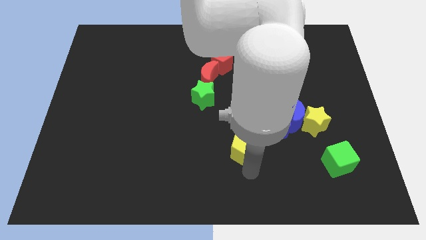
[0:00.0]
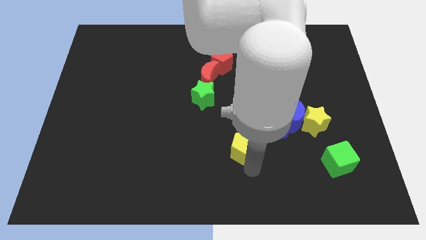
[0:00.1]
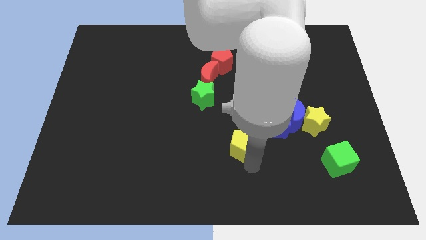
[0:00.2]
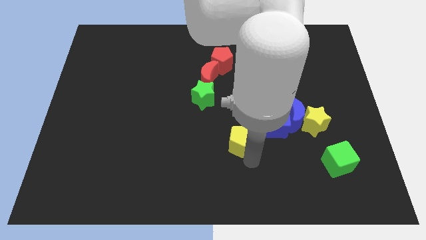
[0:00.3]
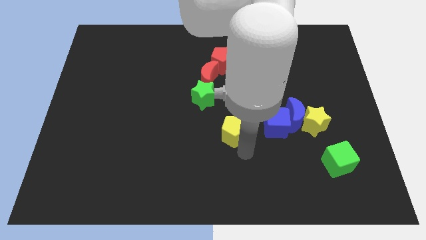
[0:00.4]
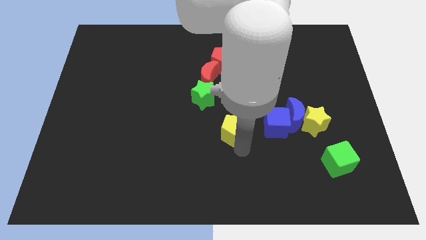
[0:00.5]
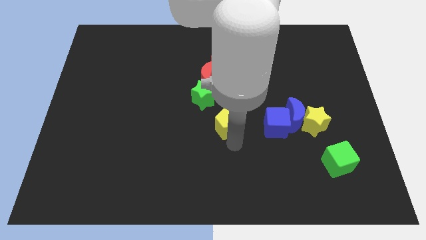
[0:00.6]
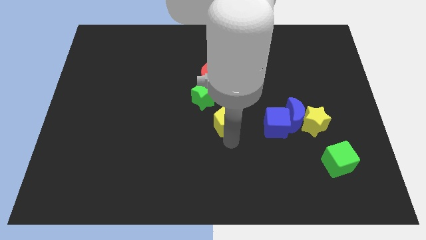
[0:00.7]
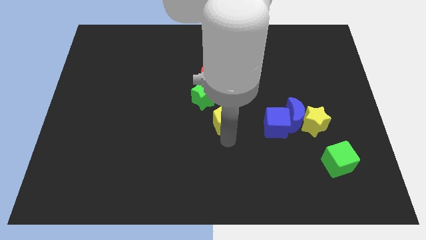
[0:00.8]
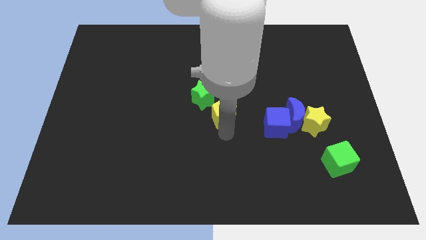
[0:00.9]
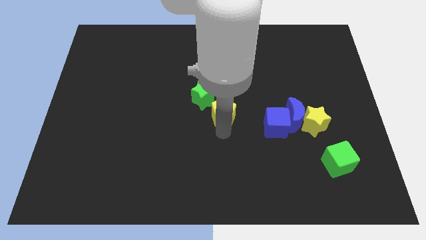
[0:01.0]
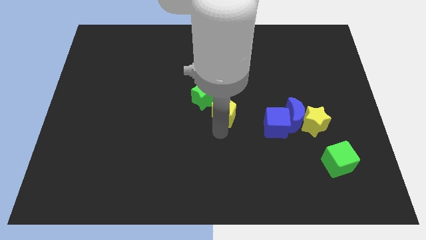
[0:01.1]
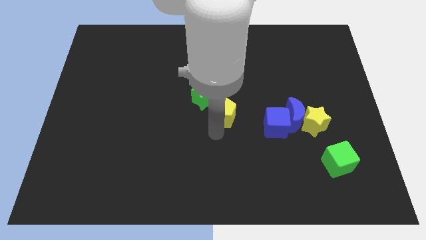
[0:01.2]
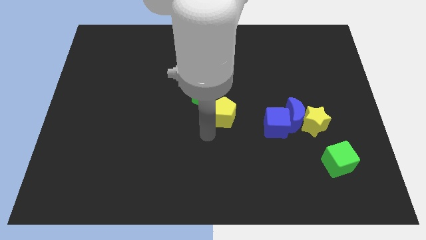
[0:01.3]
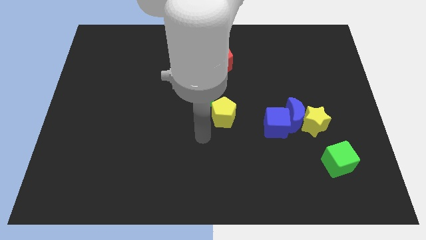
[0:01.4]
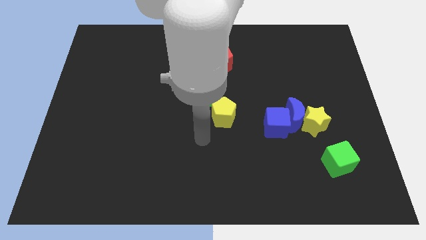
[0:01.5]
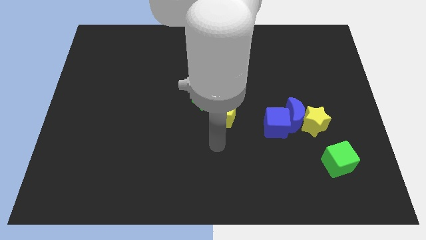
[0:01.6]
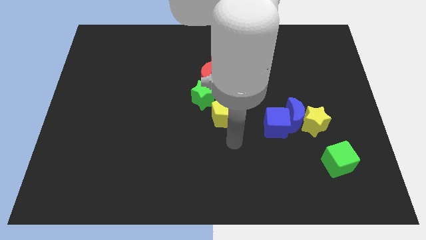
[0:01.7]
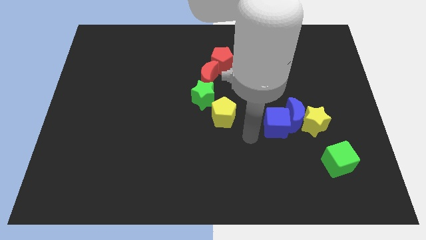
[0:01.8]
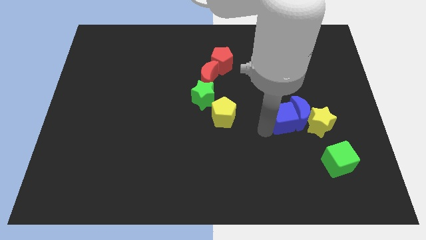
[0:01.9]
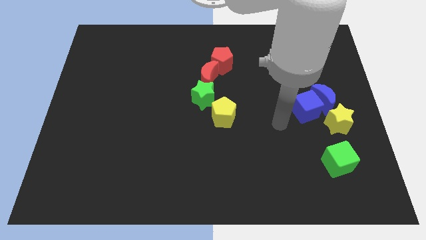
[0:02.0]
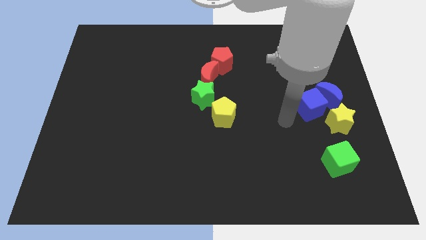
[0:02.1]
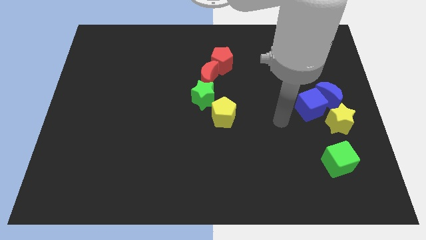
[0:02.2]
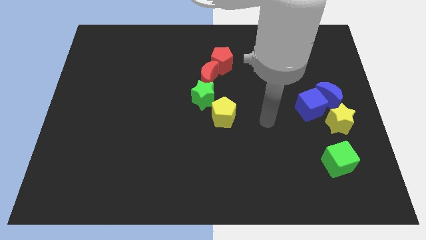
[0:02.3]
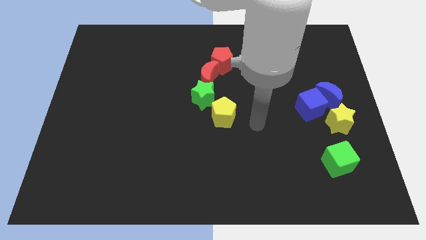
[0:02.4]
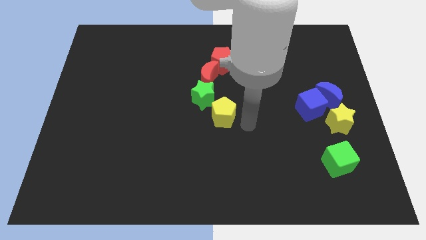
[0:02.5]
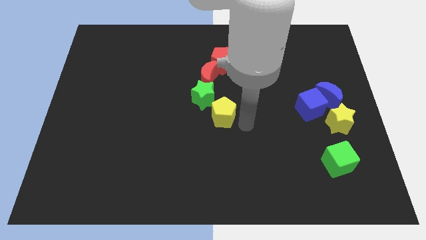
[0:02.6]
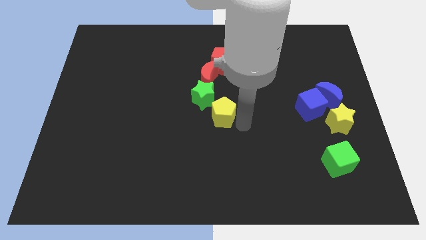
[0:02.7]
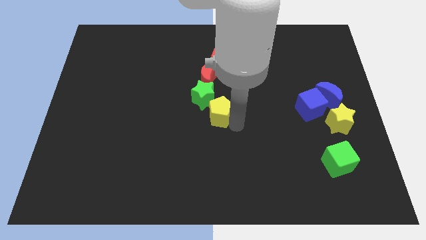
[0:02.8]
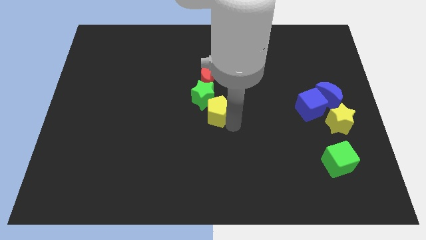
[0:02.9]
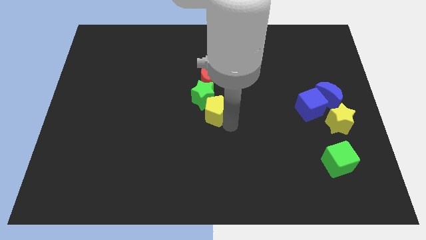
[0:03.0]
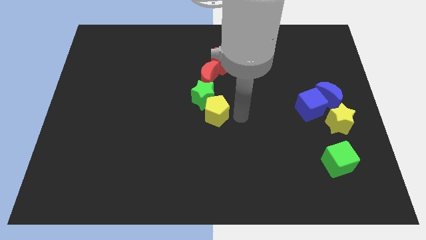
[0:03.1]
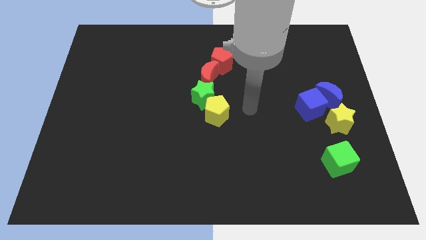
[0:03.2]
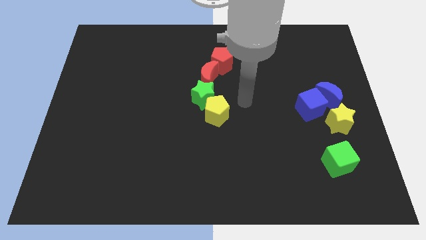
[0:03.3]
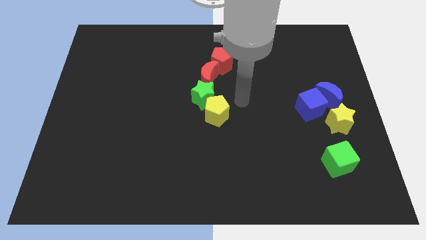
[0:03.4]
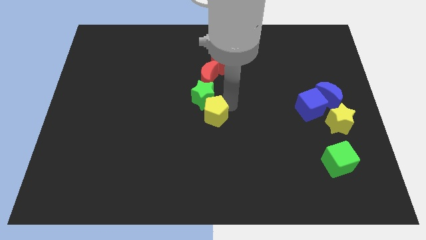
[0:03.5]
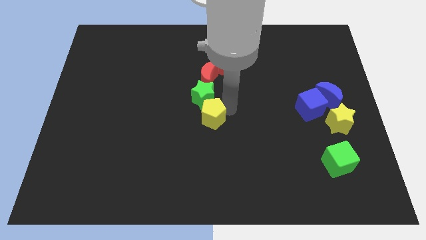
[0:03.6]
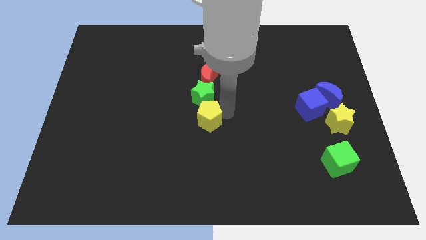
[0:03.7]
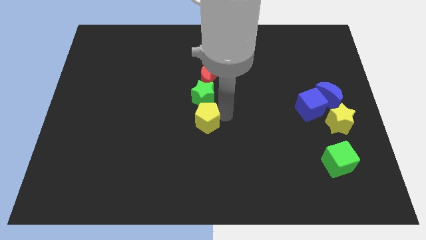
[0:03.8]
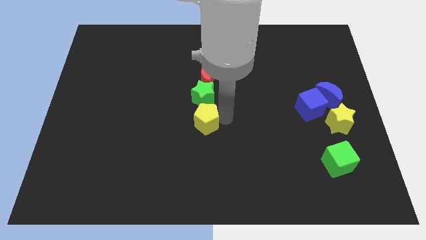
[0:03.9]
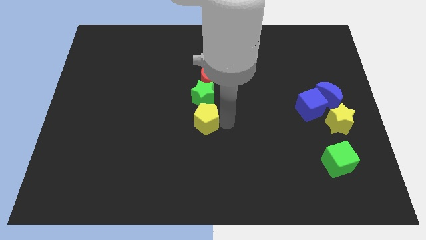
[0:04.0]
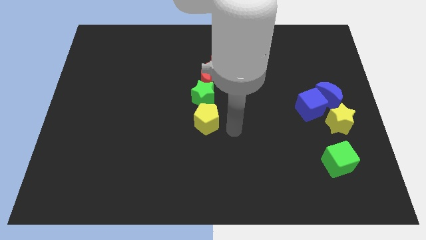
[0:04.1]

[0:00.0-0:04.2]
place the yellow pentagon to the bottom side of the green star

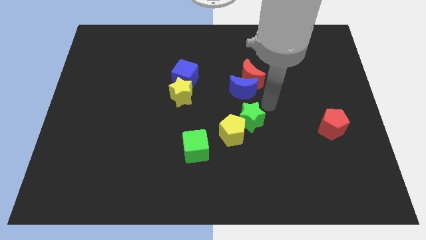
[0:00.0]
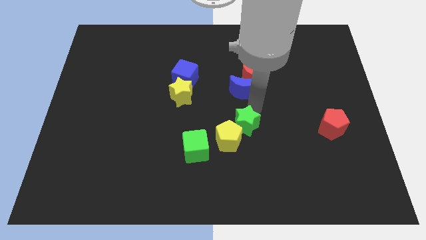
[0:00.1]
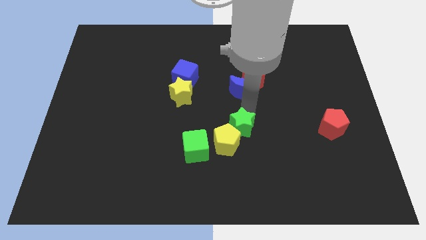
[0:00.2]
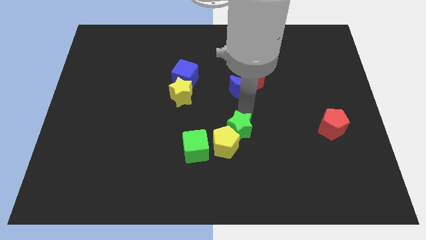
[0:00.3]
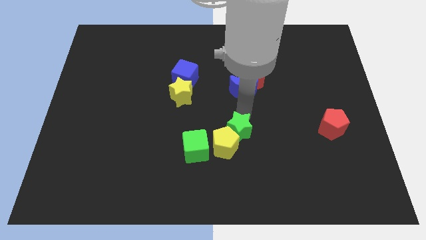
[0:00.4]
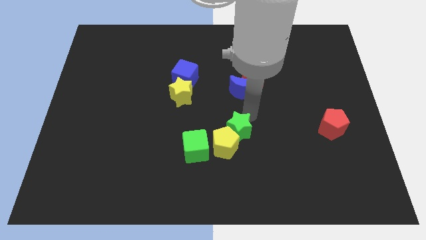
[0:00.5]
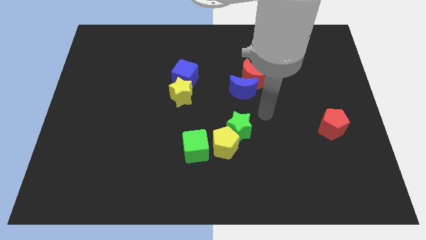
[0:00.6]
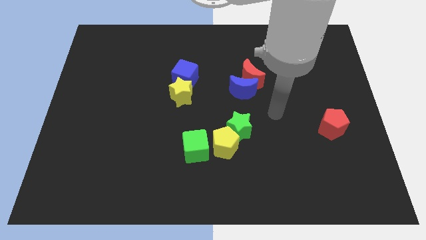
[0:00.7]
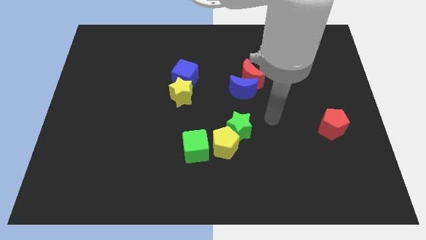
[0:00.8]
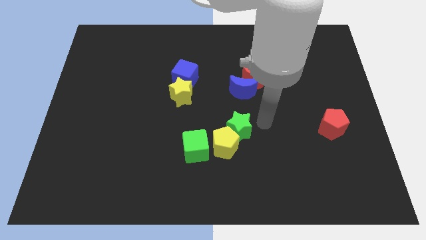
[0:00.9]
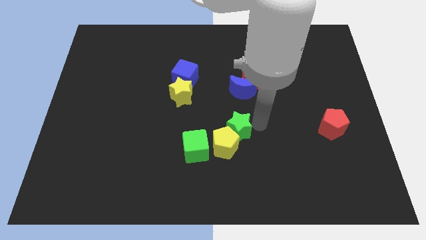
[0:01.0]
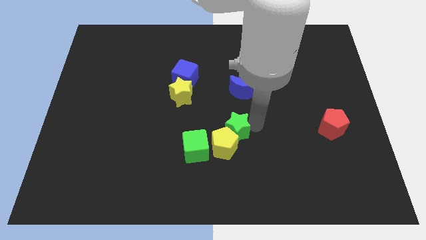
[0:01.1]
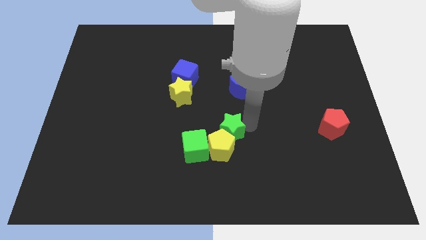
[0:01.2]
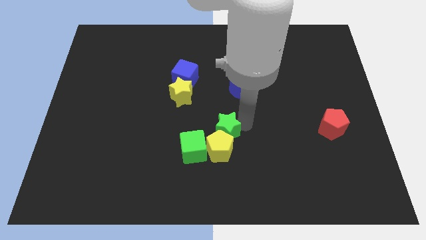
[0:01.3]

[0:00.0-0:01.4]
push the green star into the yellow pentagon from the top

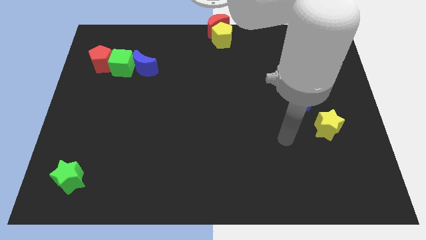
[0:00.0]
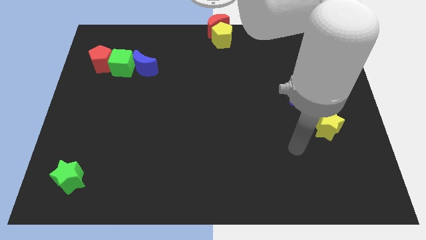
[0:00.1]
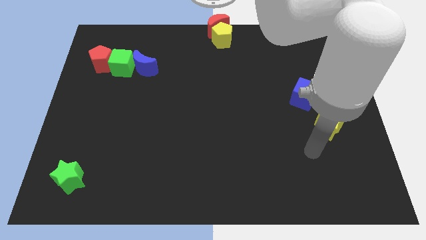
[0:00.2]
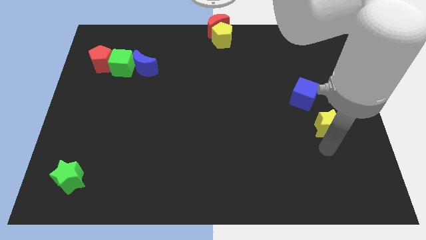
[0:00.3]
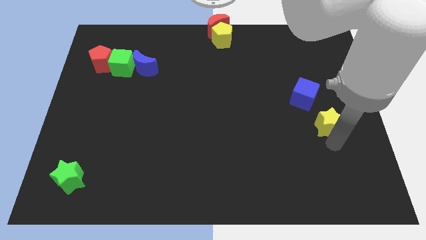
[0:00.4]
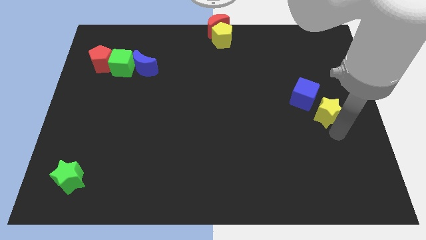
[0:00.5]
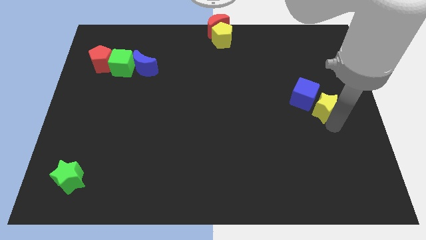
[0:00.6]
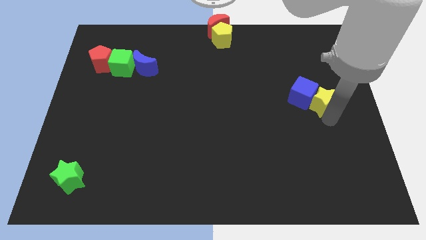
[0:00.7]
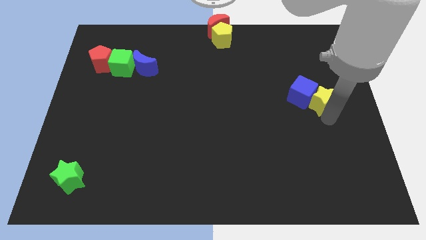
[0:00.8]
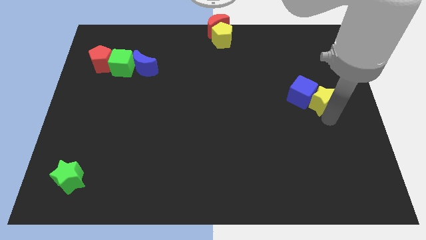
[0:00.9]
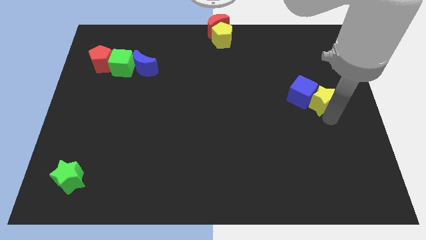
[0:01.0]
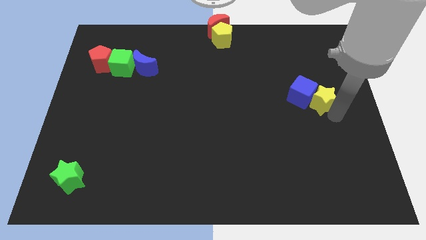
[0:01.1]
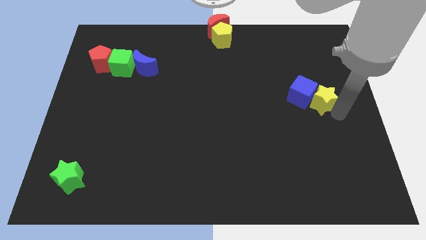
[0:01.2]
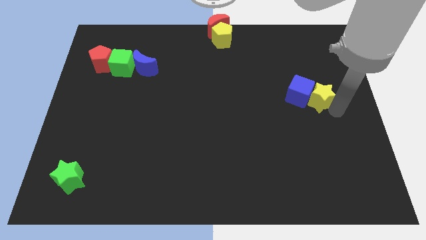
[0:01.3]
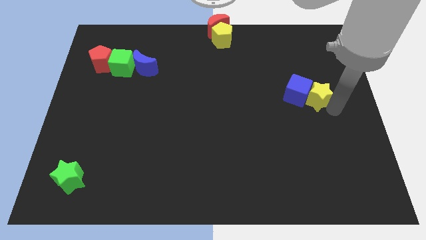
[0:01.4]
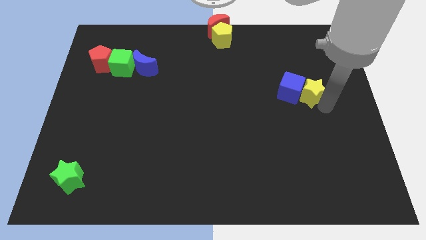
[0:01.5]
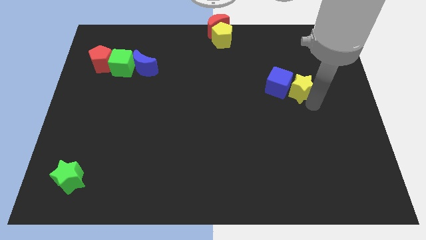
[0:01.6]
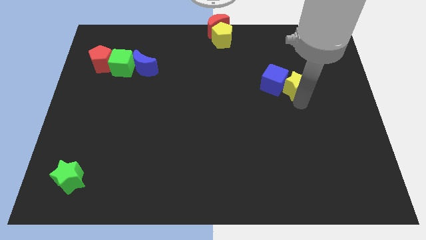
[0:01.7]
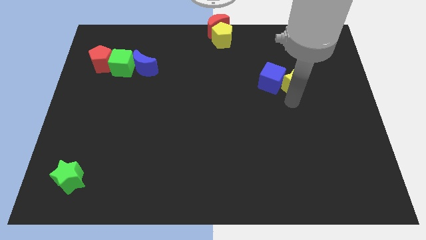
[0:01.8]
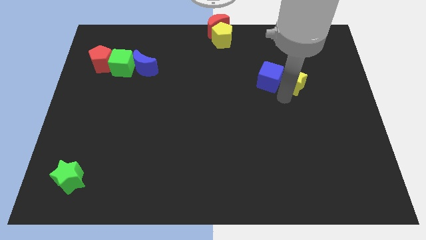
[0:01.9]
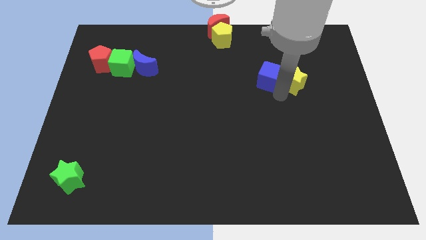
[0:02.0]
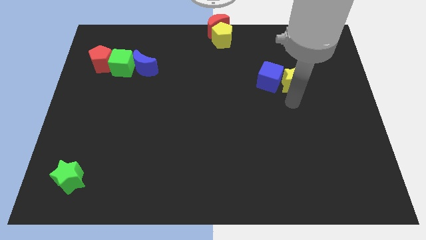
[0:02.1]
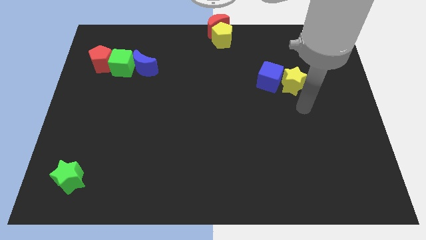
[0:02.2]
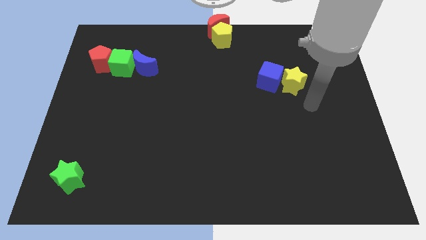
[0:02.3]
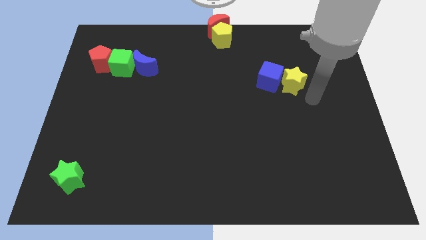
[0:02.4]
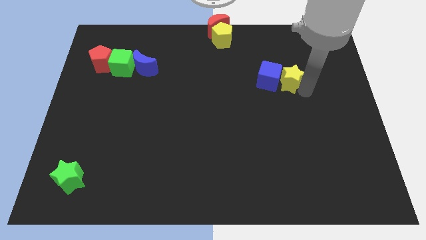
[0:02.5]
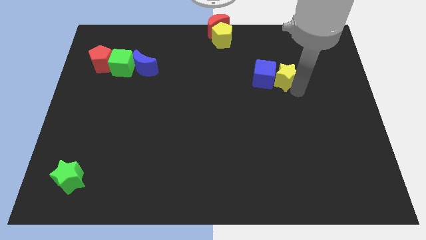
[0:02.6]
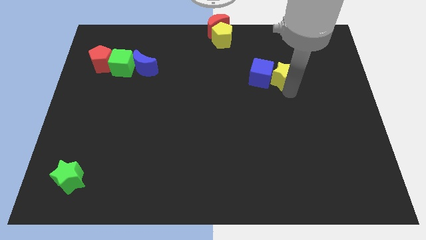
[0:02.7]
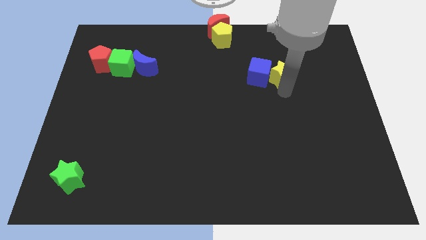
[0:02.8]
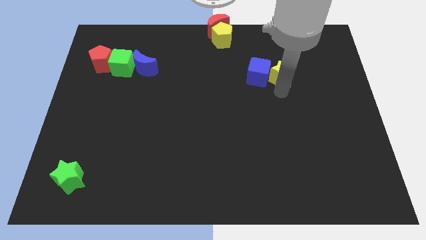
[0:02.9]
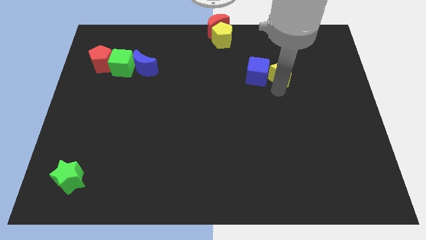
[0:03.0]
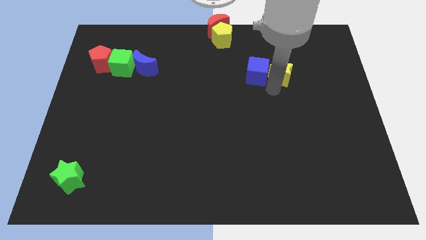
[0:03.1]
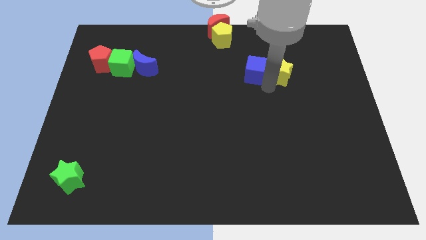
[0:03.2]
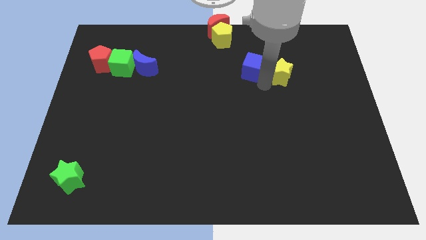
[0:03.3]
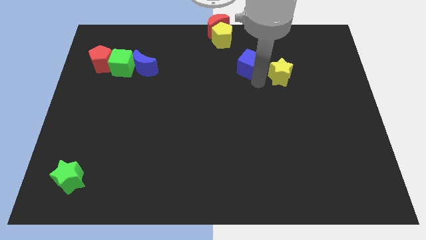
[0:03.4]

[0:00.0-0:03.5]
push the blue cube with the yellow star
